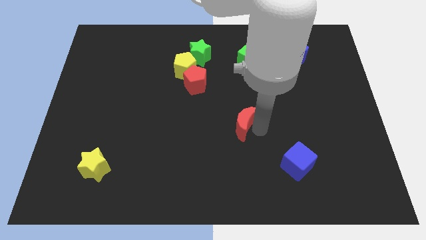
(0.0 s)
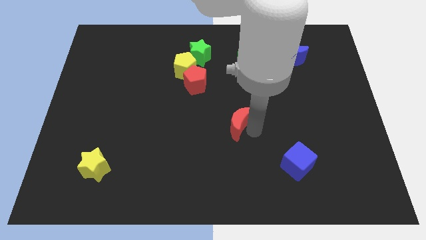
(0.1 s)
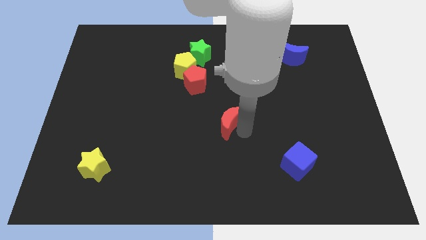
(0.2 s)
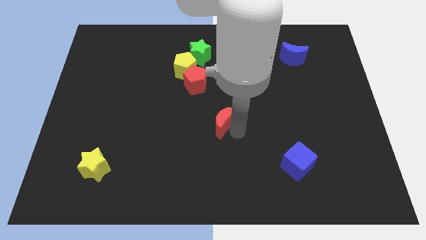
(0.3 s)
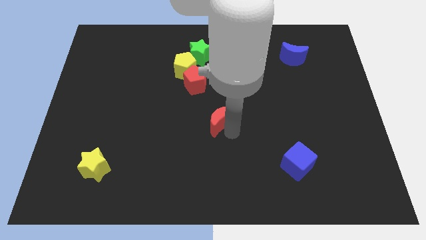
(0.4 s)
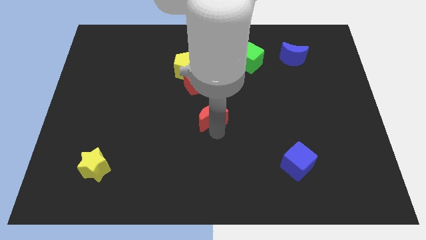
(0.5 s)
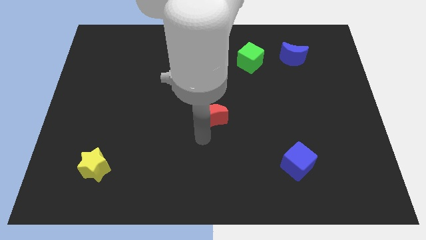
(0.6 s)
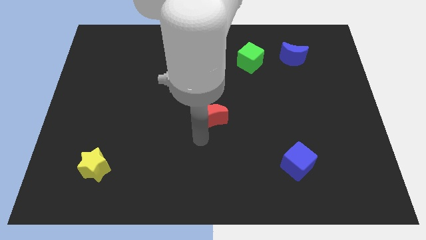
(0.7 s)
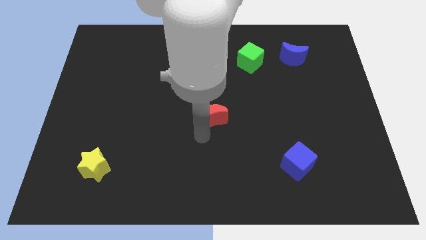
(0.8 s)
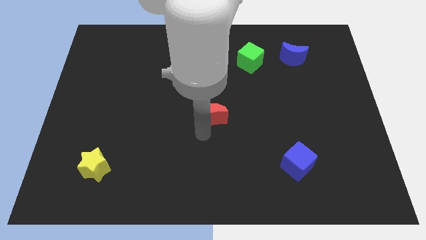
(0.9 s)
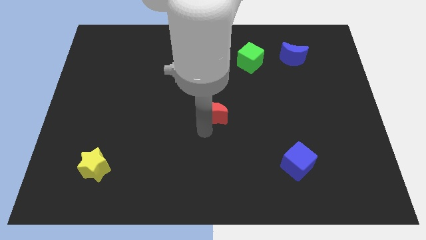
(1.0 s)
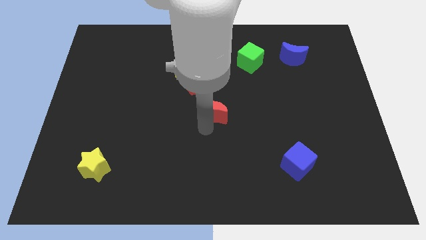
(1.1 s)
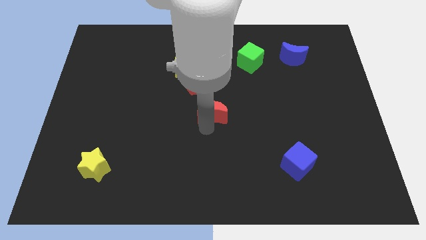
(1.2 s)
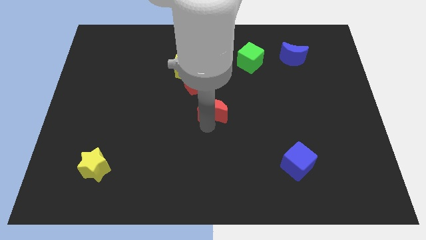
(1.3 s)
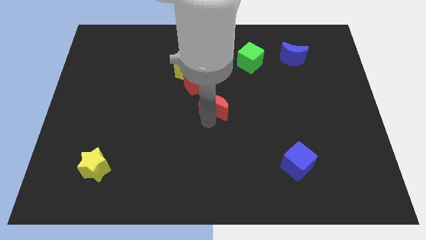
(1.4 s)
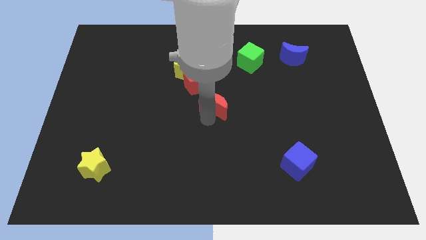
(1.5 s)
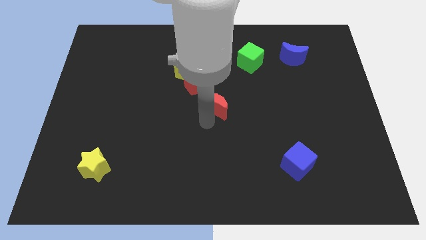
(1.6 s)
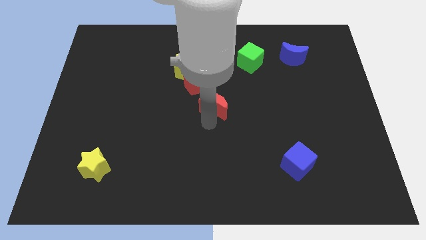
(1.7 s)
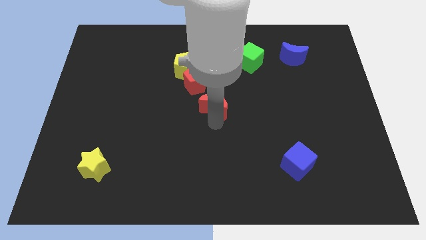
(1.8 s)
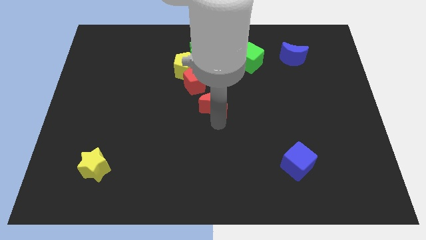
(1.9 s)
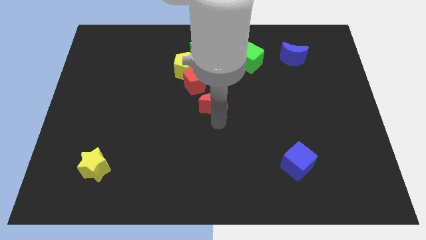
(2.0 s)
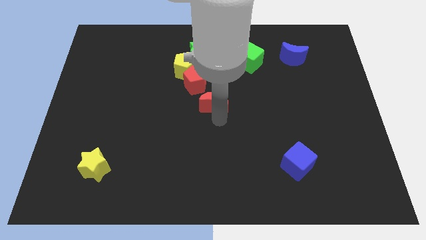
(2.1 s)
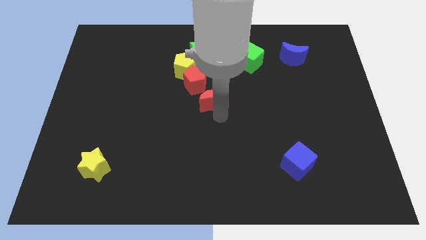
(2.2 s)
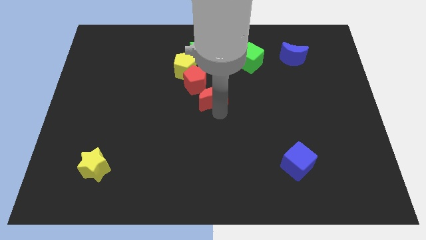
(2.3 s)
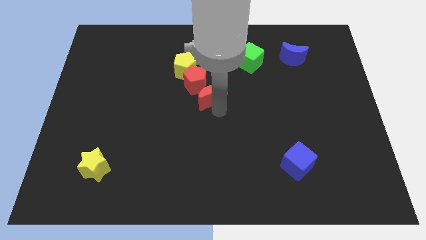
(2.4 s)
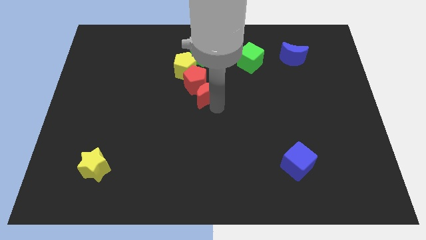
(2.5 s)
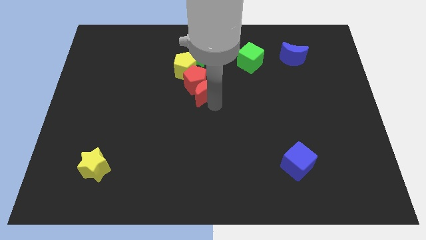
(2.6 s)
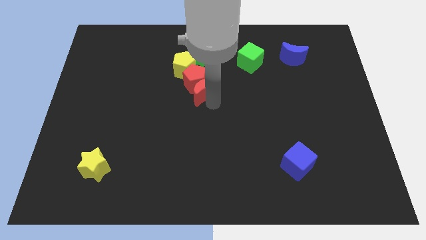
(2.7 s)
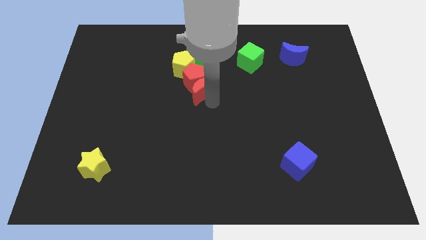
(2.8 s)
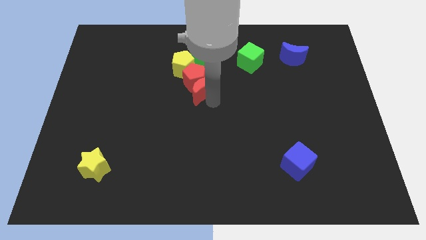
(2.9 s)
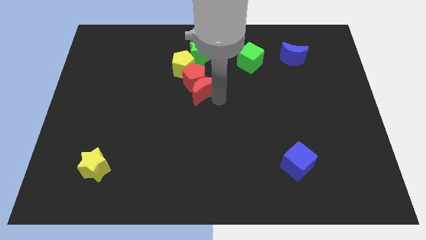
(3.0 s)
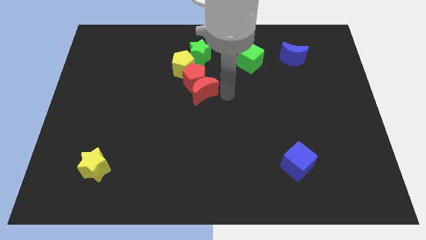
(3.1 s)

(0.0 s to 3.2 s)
push the red crescent into the the red pentagon

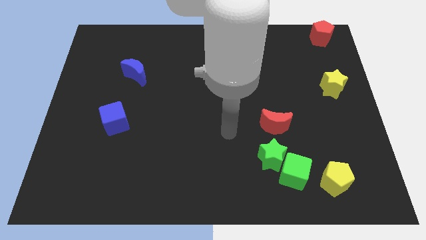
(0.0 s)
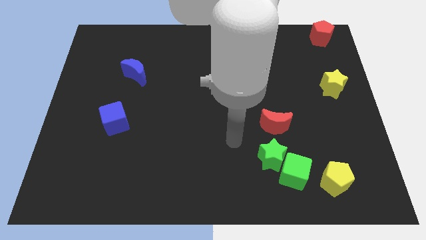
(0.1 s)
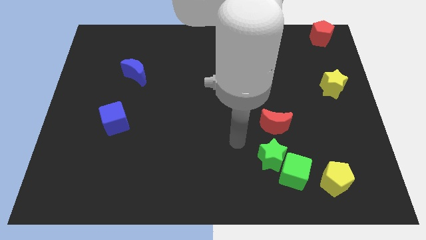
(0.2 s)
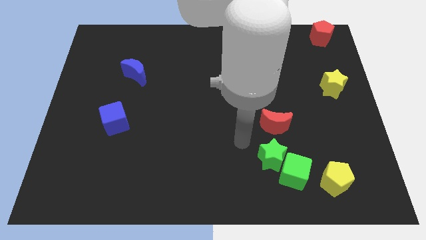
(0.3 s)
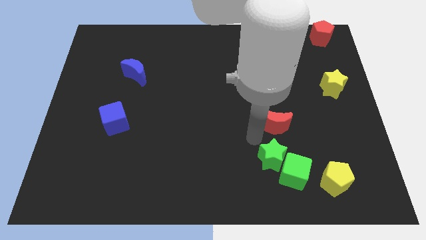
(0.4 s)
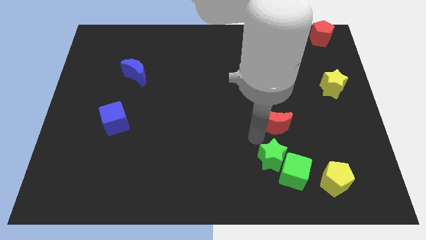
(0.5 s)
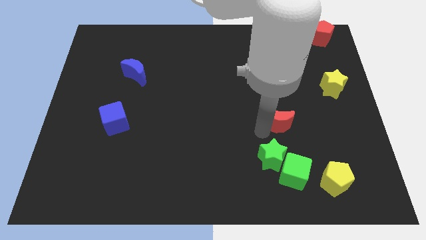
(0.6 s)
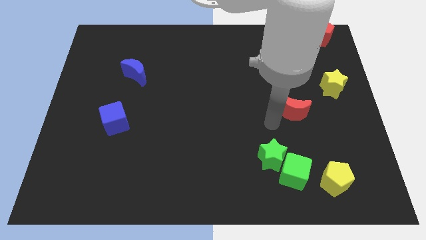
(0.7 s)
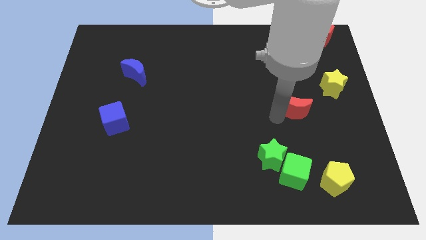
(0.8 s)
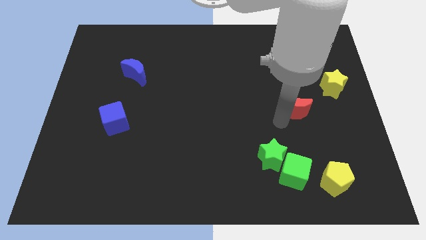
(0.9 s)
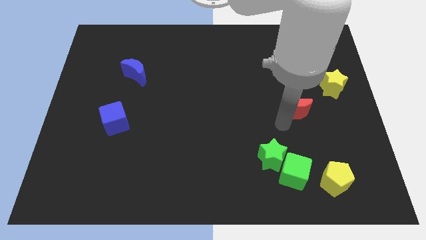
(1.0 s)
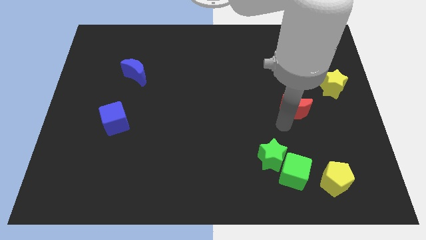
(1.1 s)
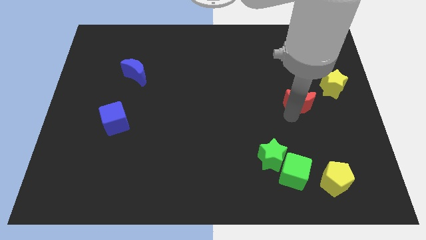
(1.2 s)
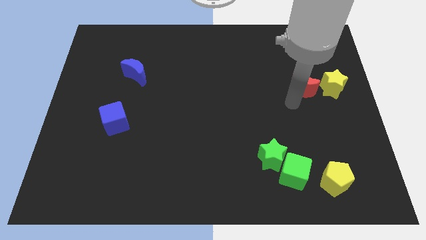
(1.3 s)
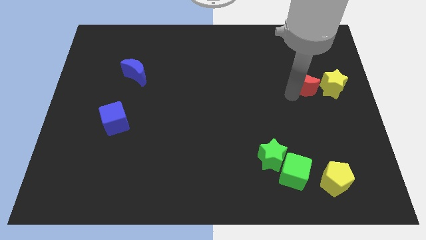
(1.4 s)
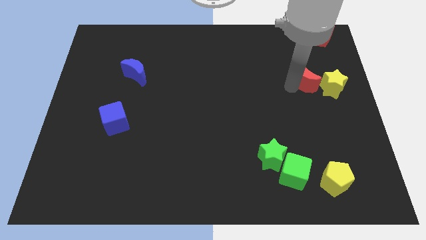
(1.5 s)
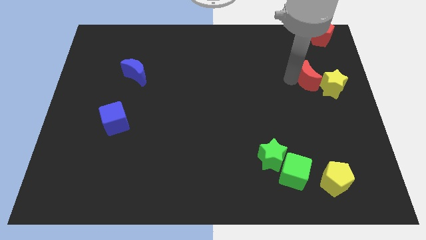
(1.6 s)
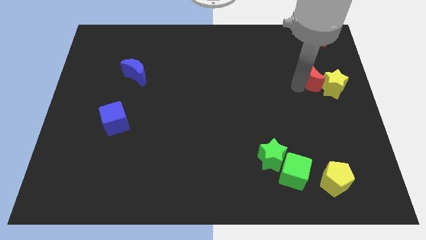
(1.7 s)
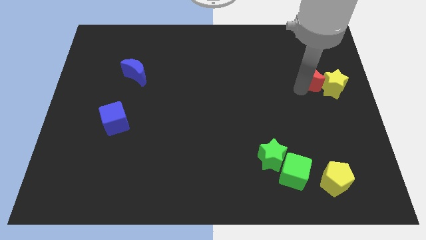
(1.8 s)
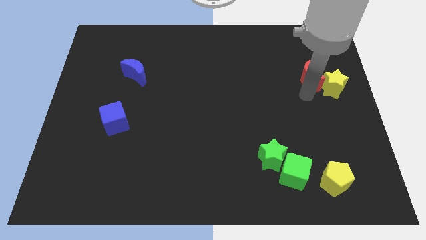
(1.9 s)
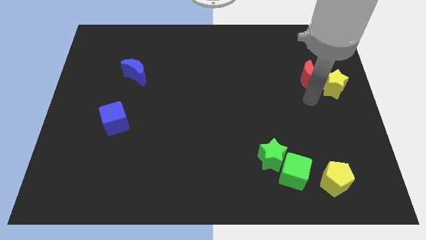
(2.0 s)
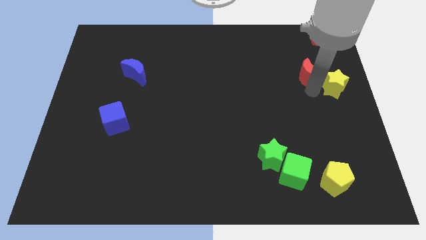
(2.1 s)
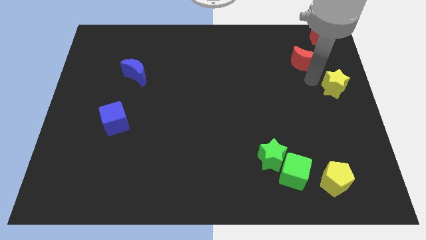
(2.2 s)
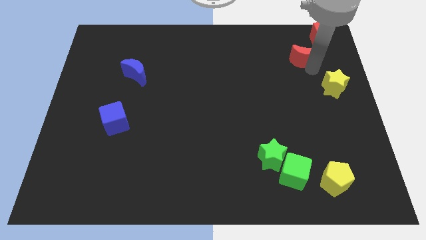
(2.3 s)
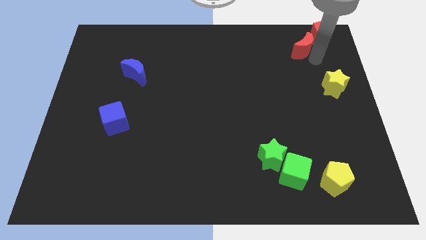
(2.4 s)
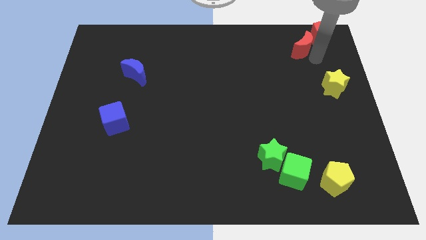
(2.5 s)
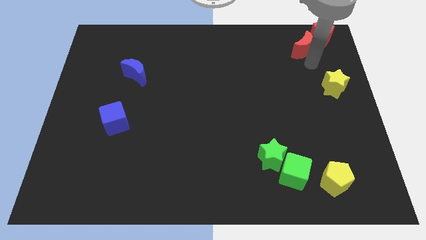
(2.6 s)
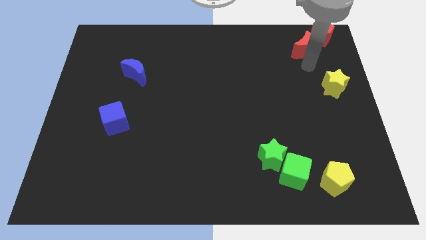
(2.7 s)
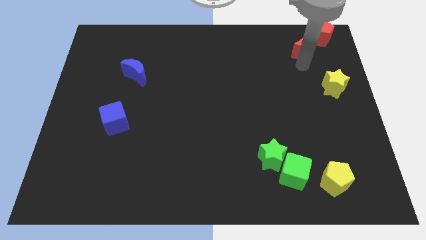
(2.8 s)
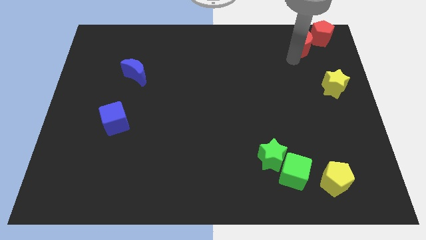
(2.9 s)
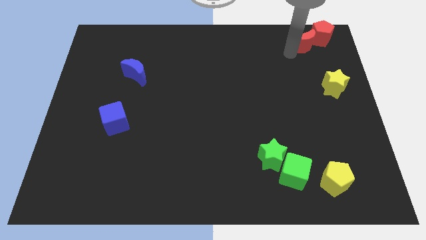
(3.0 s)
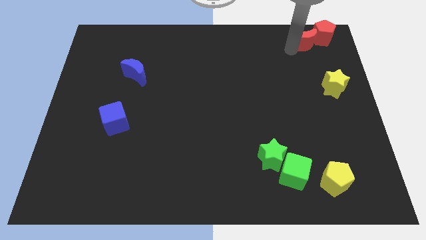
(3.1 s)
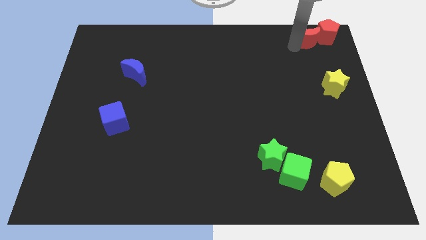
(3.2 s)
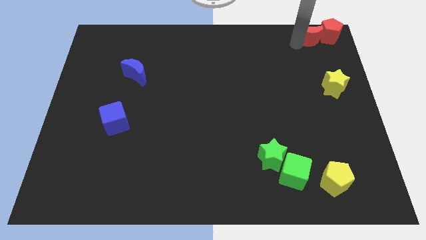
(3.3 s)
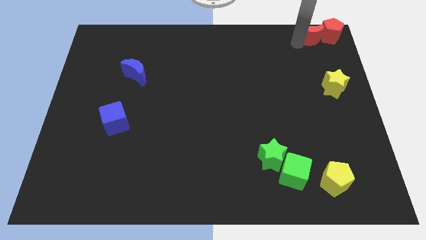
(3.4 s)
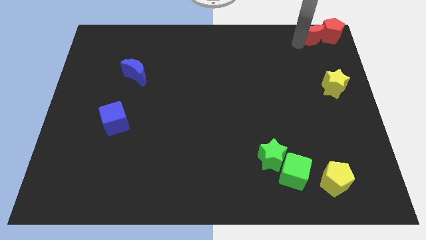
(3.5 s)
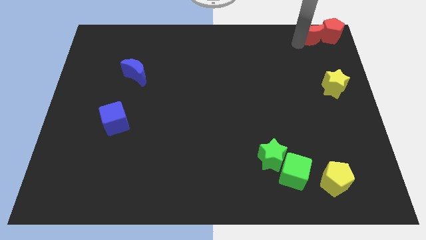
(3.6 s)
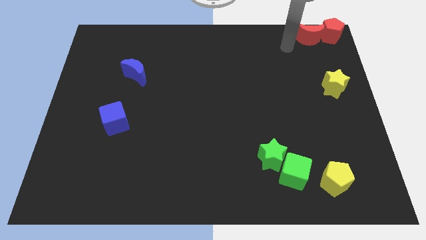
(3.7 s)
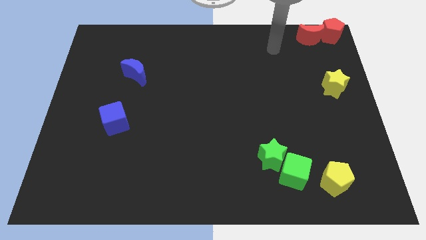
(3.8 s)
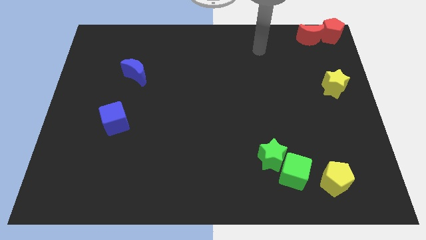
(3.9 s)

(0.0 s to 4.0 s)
push the red crescent left to the red pentagon

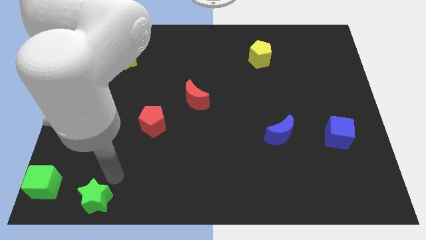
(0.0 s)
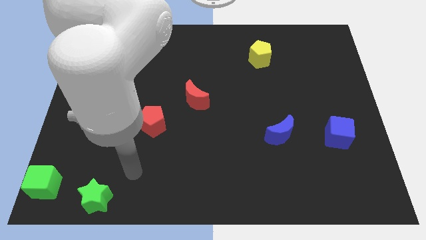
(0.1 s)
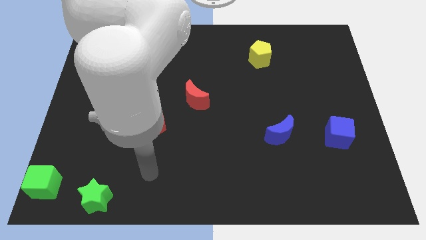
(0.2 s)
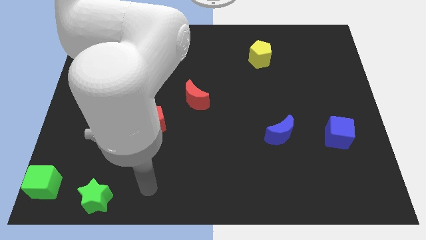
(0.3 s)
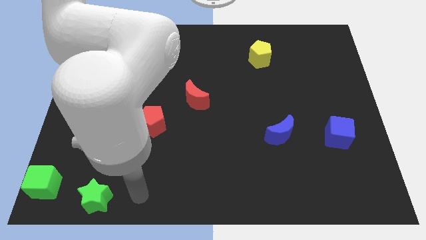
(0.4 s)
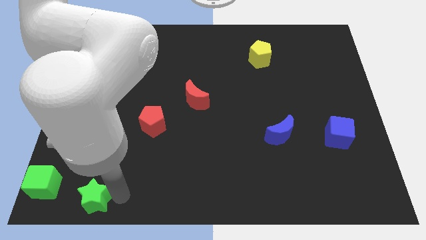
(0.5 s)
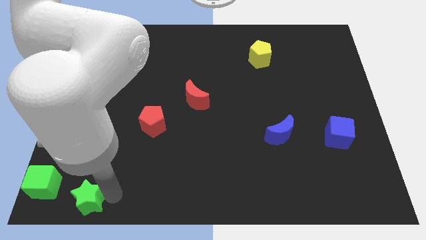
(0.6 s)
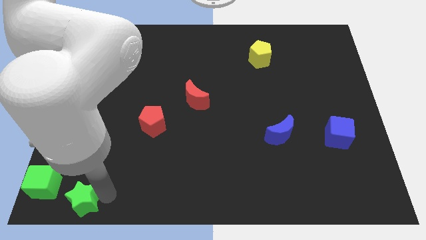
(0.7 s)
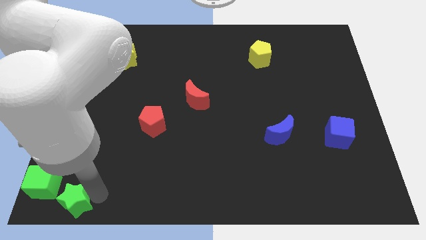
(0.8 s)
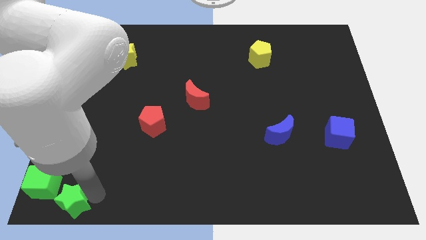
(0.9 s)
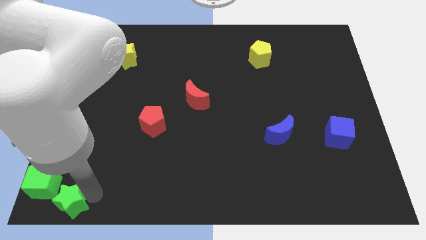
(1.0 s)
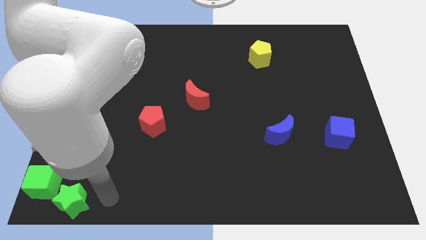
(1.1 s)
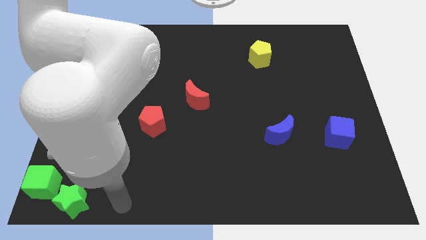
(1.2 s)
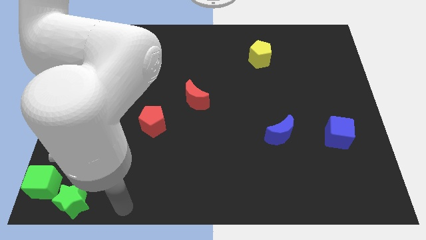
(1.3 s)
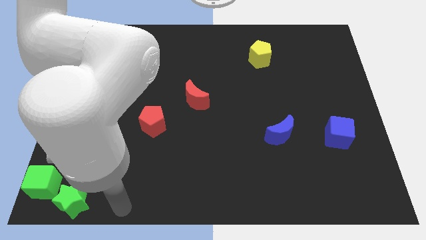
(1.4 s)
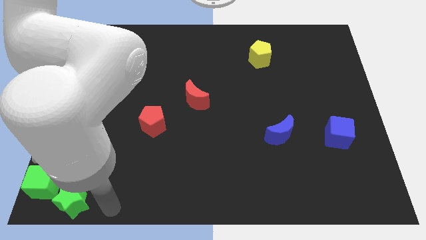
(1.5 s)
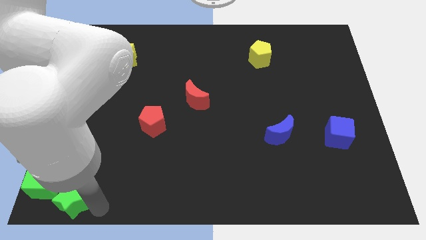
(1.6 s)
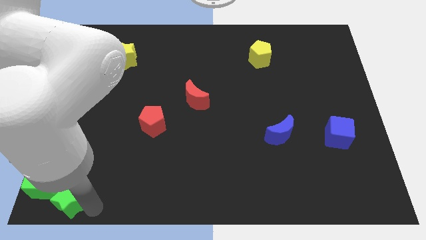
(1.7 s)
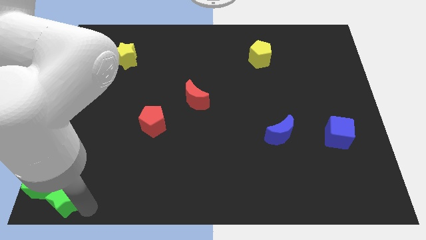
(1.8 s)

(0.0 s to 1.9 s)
move green star into green cube
